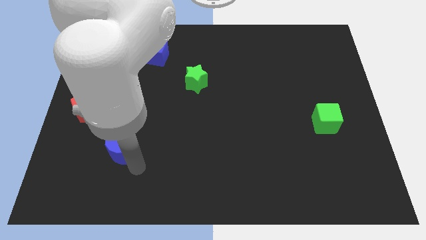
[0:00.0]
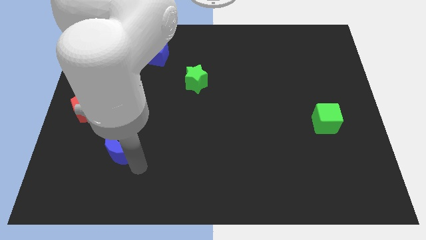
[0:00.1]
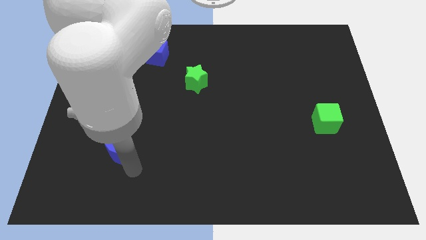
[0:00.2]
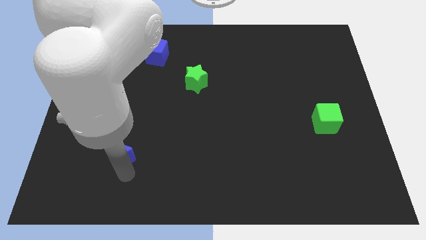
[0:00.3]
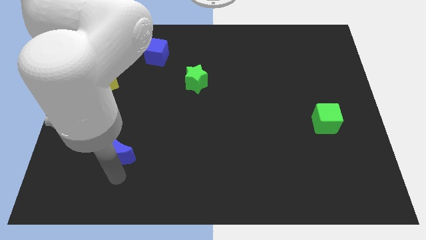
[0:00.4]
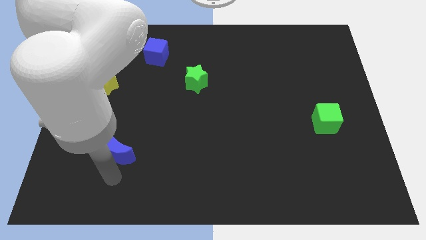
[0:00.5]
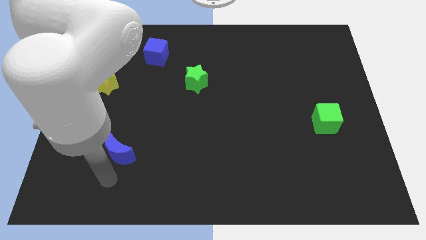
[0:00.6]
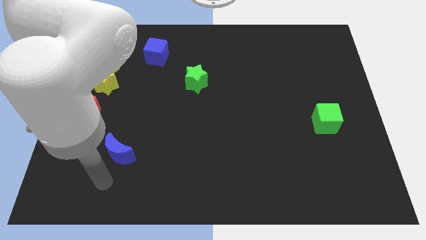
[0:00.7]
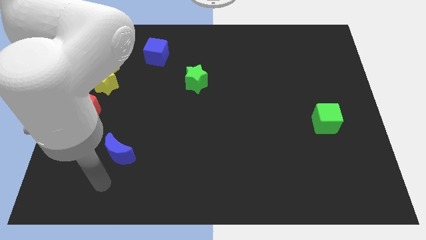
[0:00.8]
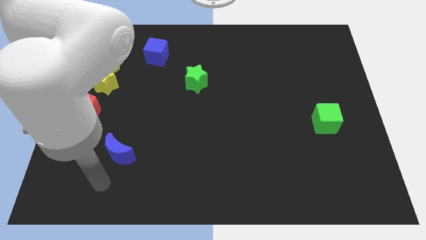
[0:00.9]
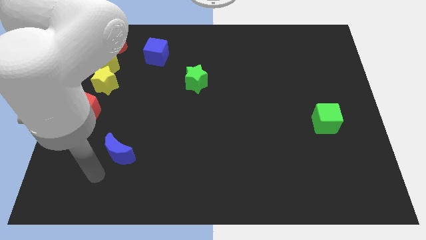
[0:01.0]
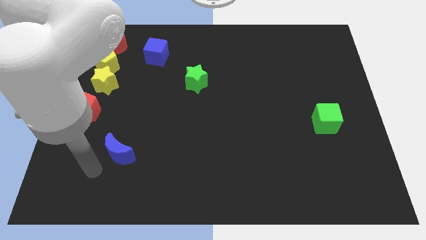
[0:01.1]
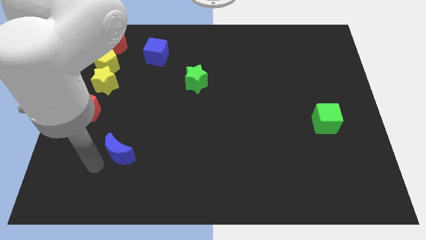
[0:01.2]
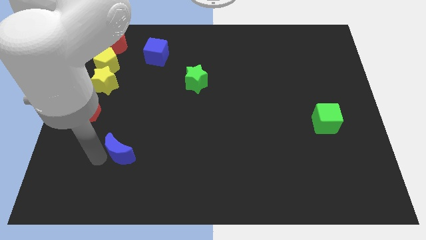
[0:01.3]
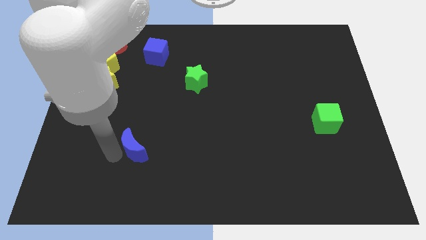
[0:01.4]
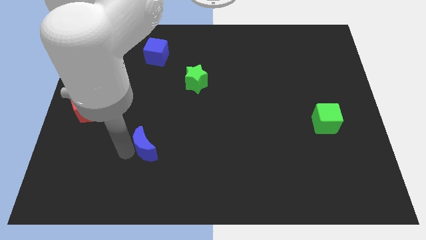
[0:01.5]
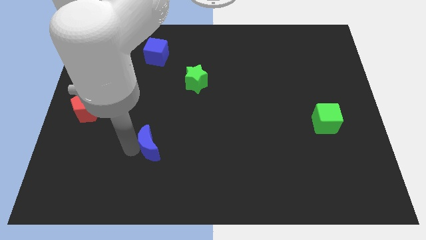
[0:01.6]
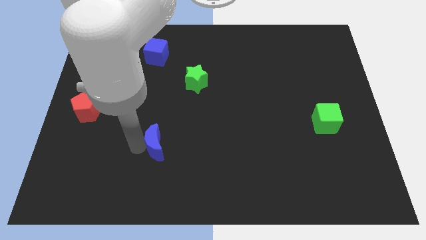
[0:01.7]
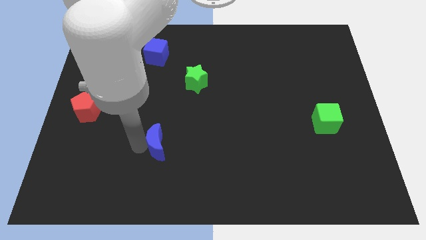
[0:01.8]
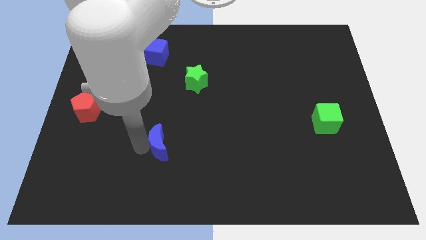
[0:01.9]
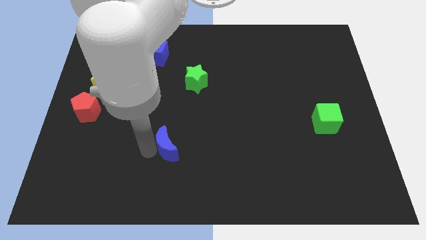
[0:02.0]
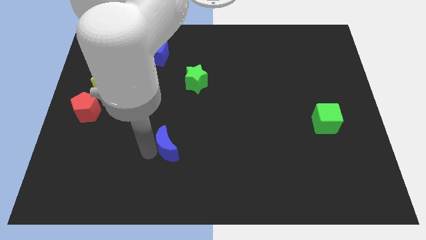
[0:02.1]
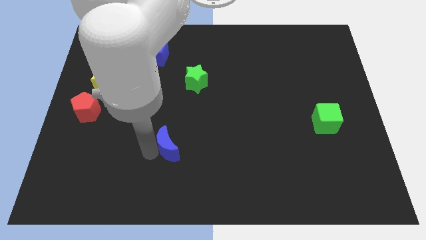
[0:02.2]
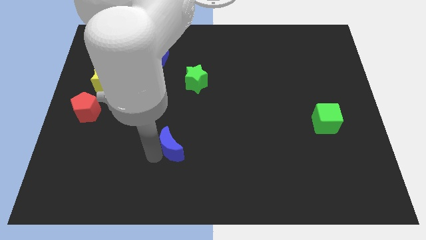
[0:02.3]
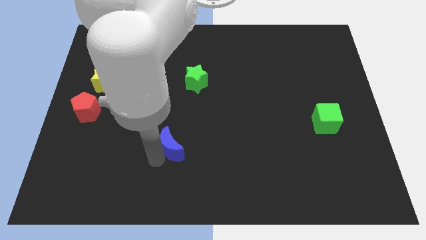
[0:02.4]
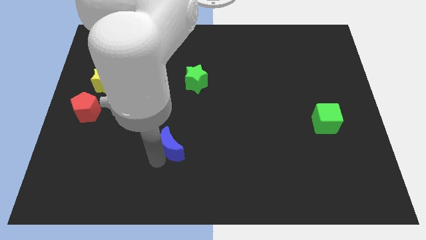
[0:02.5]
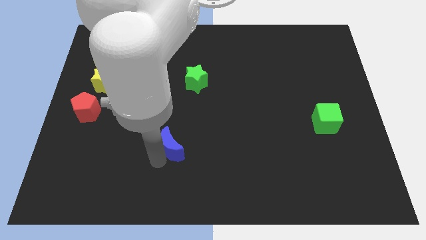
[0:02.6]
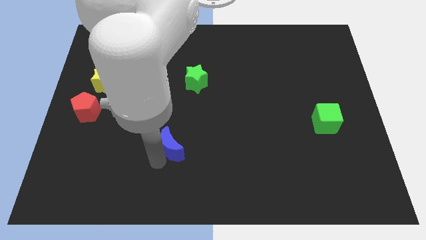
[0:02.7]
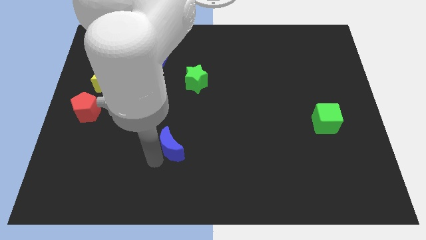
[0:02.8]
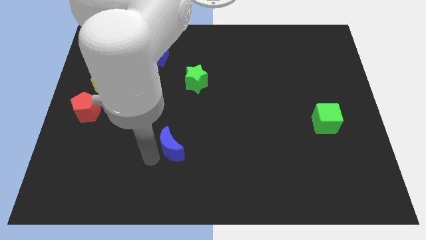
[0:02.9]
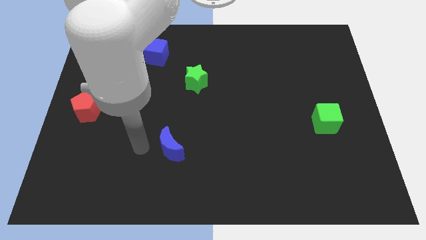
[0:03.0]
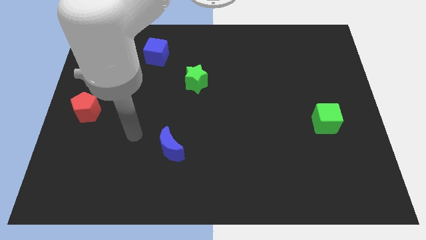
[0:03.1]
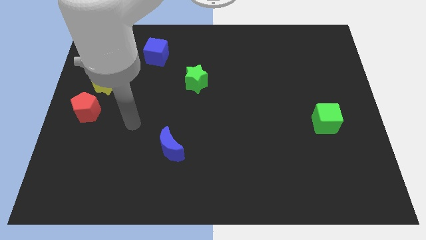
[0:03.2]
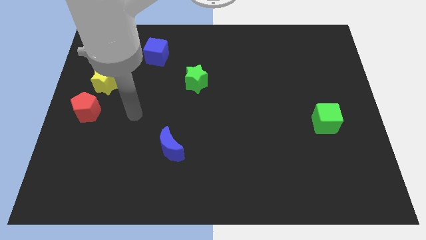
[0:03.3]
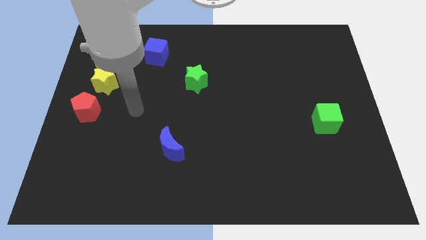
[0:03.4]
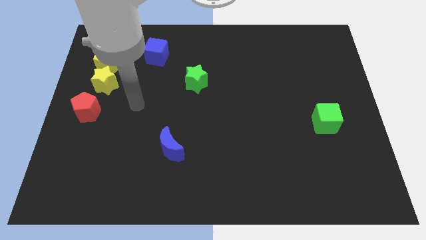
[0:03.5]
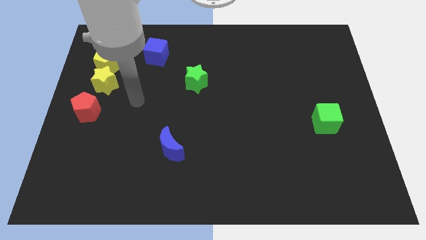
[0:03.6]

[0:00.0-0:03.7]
push the blue moon below green star

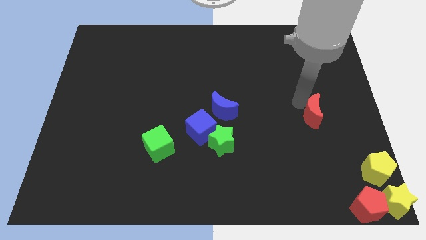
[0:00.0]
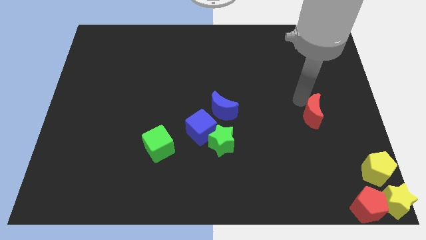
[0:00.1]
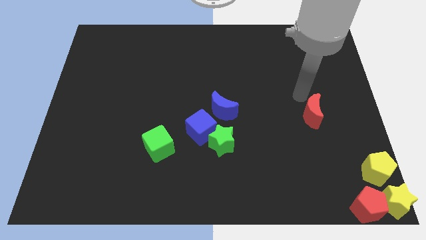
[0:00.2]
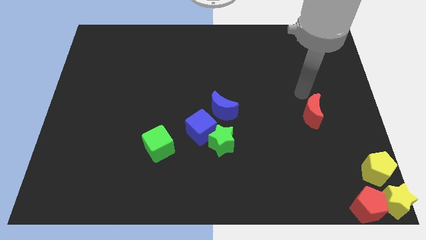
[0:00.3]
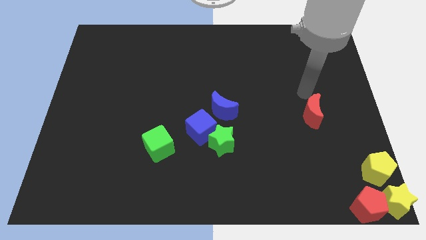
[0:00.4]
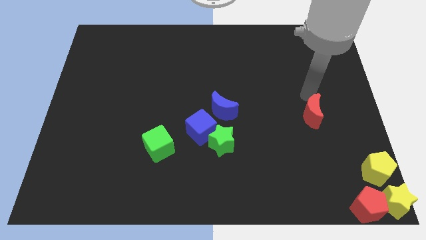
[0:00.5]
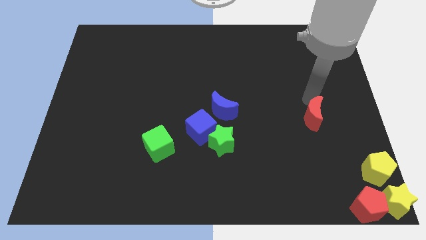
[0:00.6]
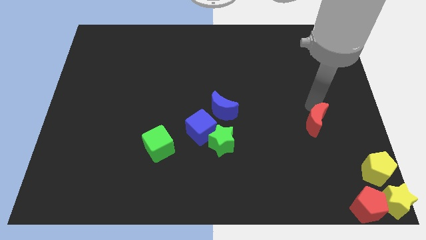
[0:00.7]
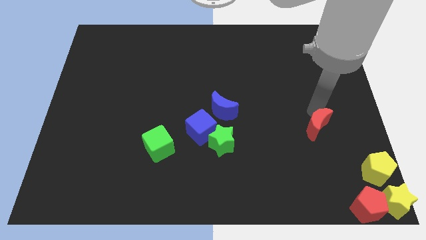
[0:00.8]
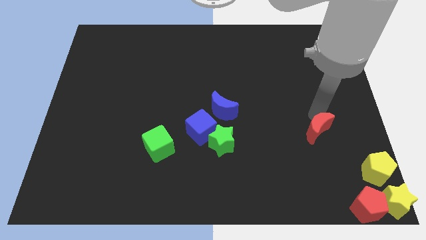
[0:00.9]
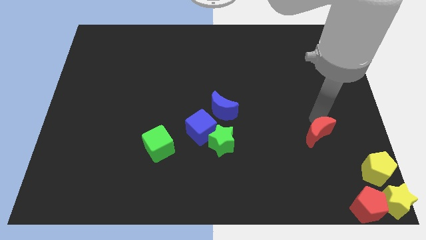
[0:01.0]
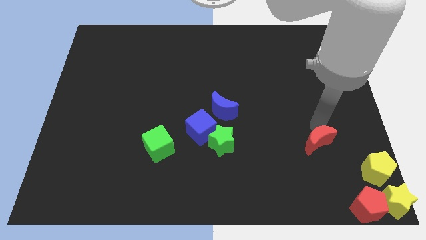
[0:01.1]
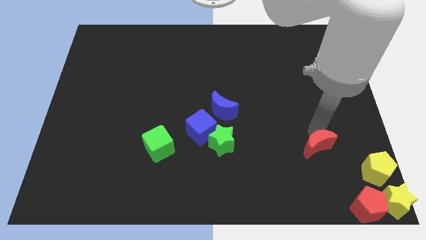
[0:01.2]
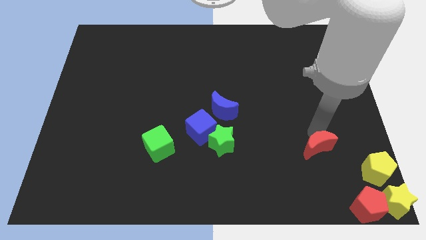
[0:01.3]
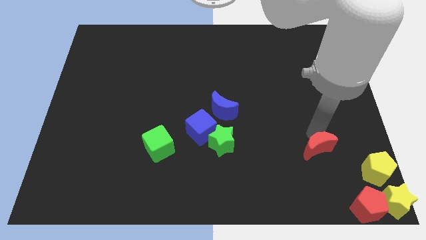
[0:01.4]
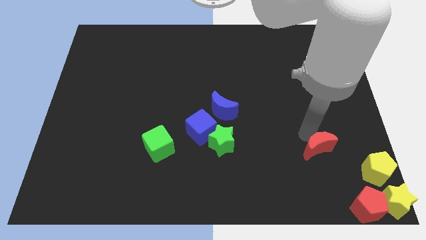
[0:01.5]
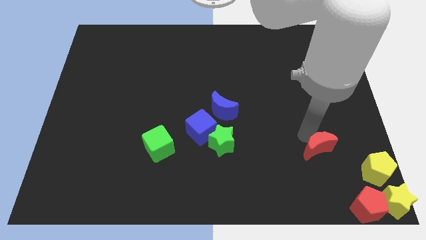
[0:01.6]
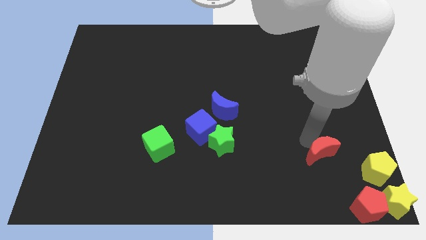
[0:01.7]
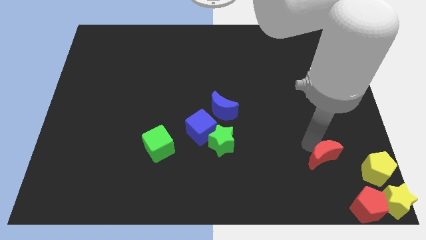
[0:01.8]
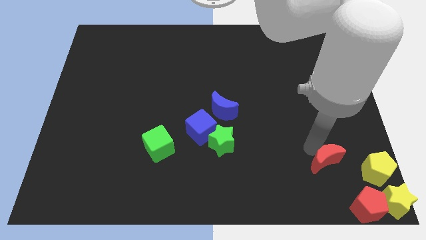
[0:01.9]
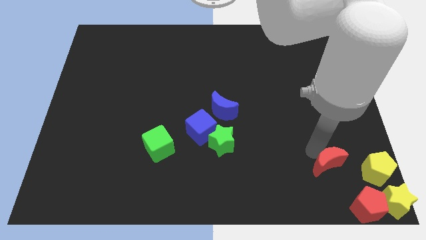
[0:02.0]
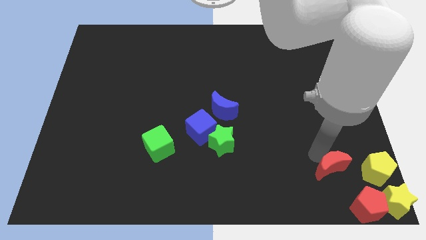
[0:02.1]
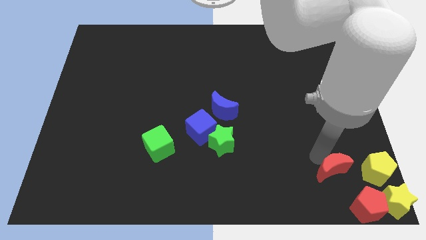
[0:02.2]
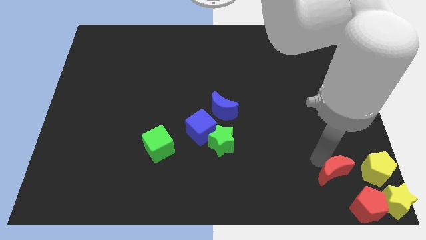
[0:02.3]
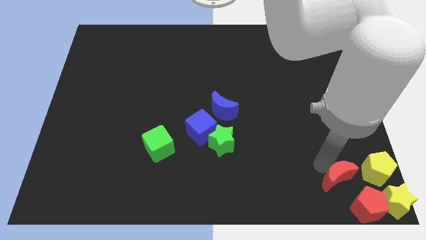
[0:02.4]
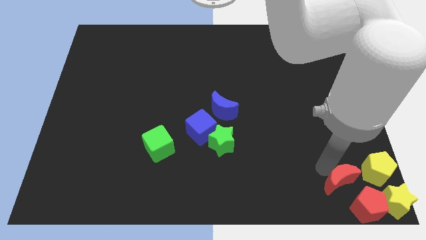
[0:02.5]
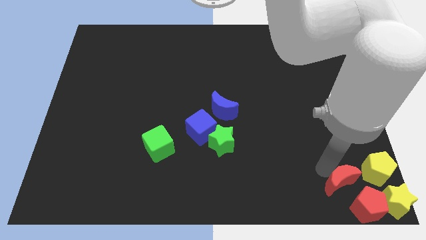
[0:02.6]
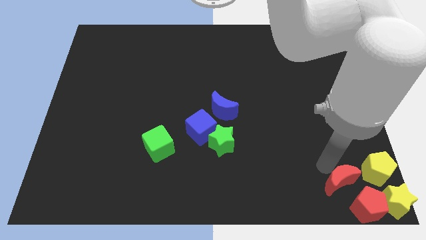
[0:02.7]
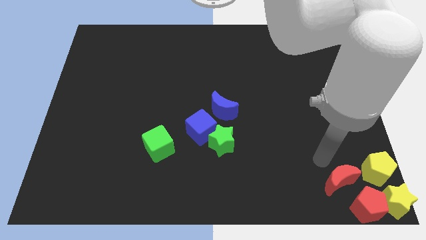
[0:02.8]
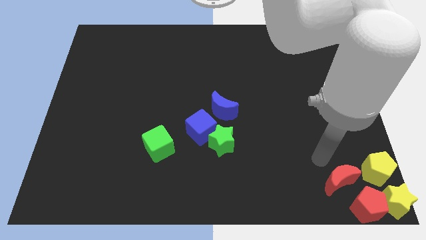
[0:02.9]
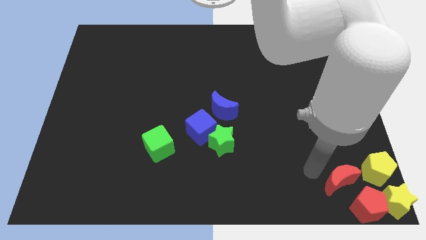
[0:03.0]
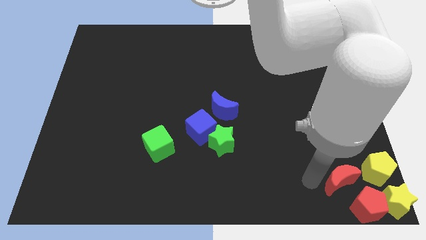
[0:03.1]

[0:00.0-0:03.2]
place the red crescent to the left side of yellow pentagon

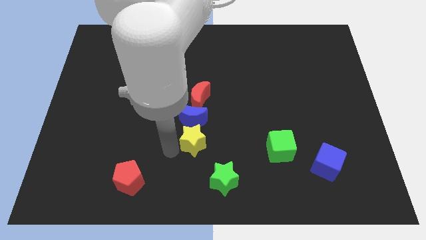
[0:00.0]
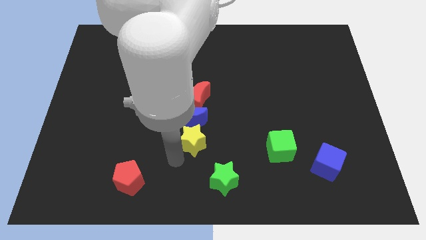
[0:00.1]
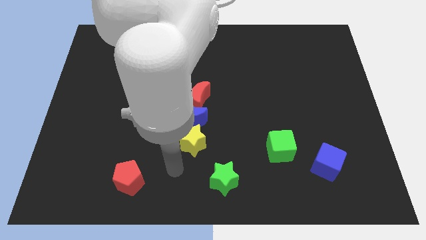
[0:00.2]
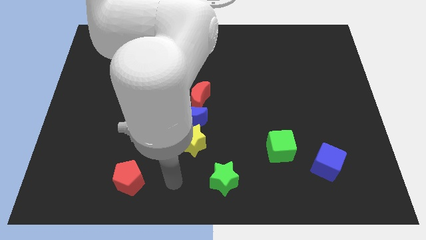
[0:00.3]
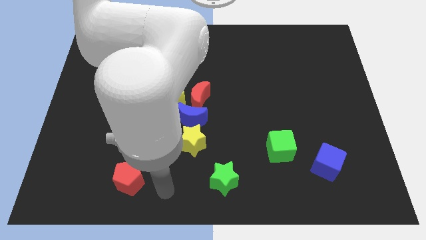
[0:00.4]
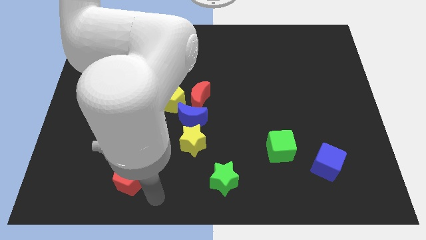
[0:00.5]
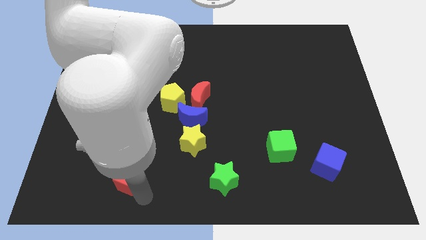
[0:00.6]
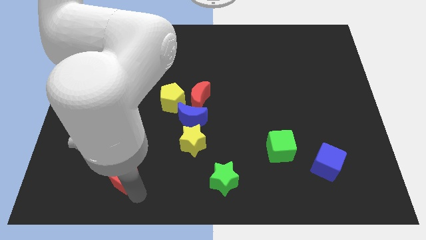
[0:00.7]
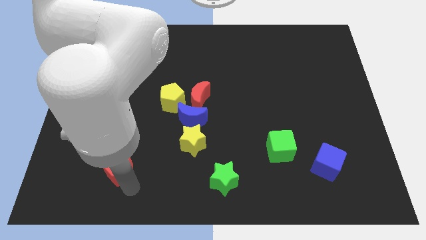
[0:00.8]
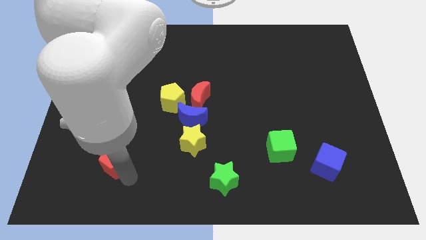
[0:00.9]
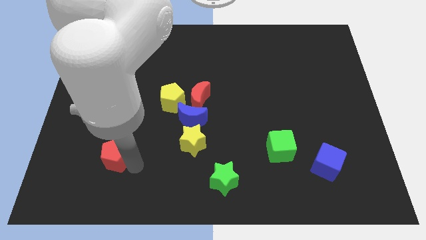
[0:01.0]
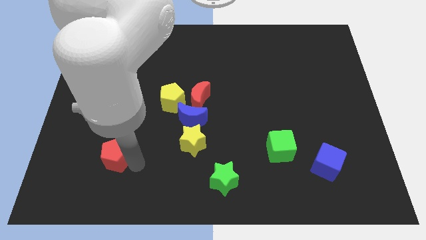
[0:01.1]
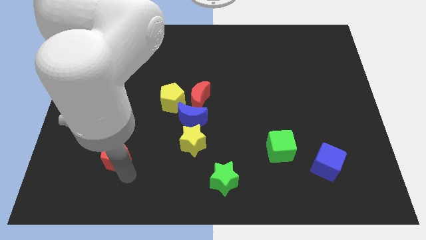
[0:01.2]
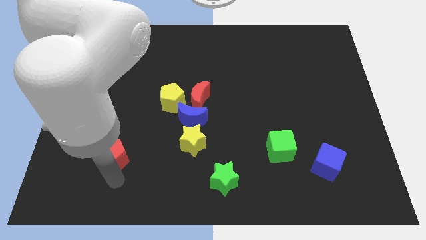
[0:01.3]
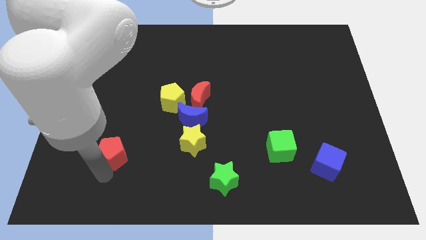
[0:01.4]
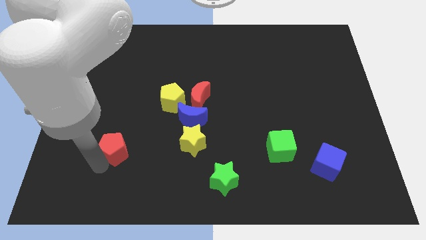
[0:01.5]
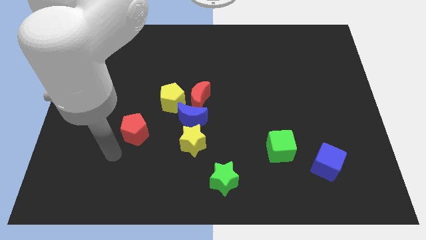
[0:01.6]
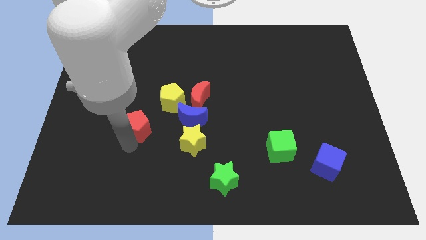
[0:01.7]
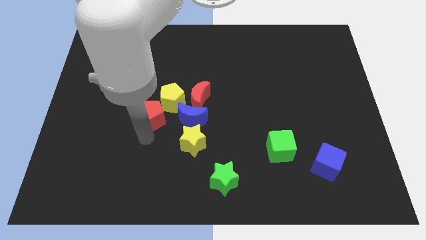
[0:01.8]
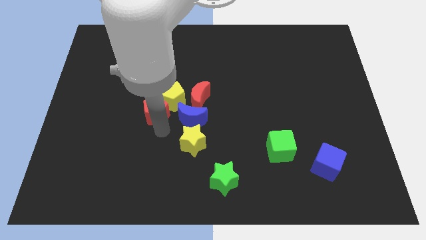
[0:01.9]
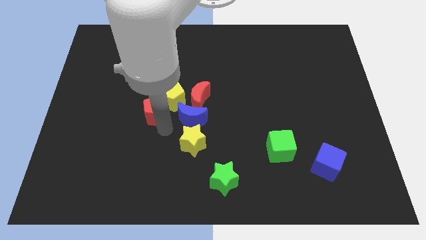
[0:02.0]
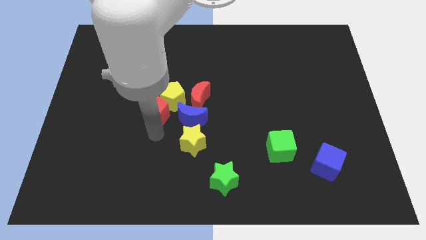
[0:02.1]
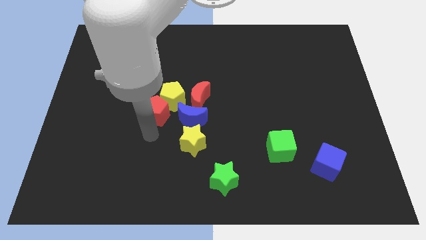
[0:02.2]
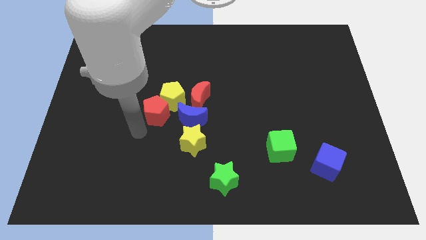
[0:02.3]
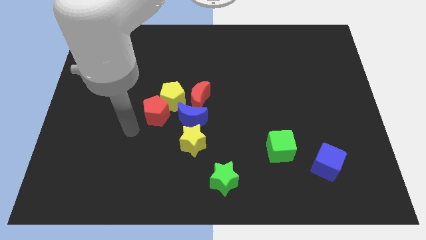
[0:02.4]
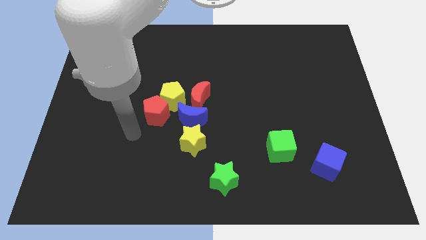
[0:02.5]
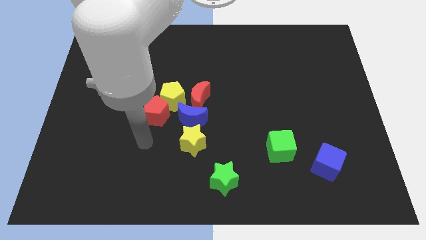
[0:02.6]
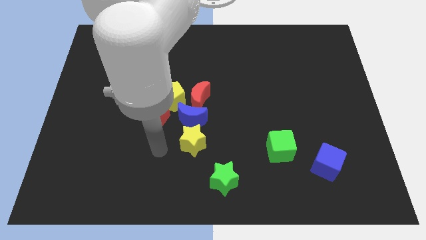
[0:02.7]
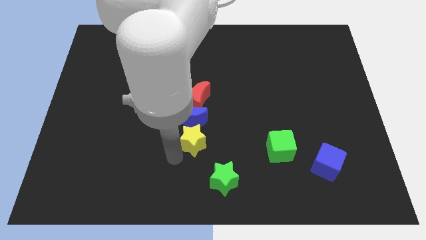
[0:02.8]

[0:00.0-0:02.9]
push red pentagon in to yellow pentagon
